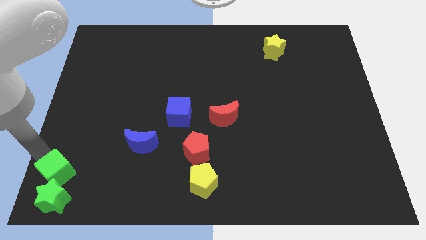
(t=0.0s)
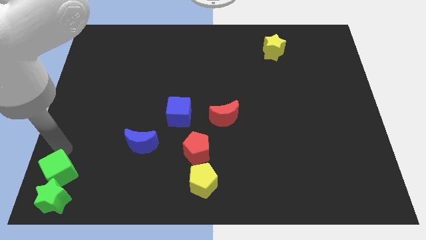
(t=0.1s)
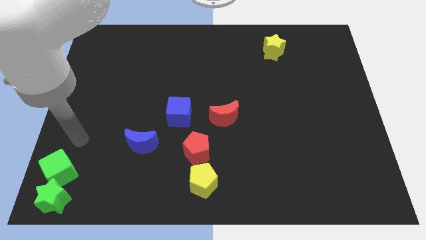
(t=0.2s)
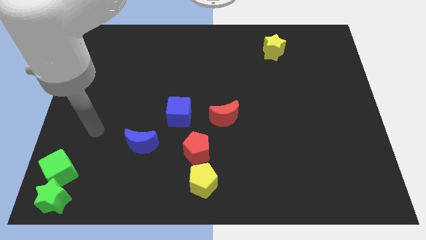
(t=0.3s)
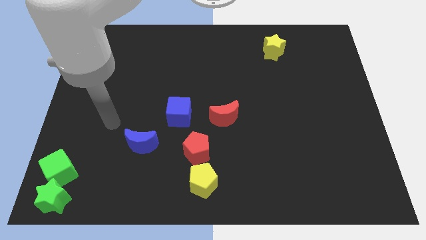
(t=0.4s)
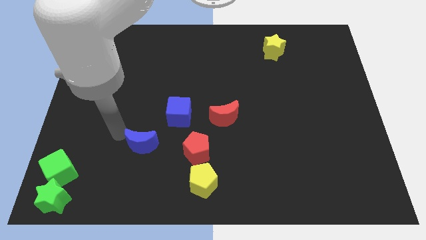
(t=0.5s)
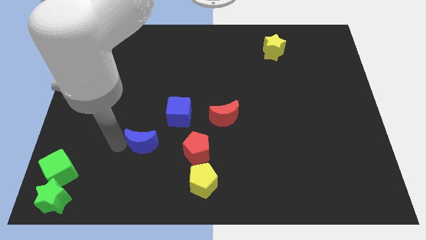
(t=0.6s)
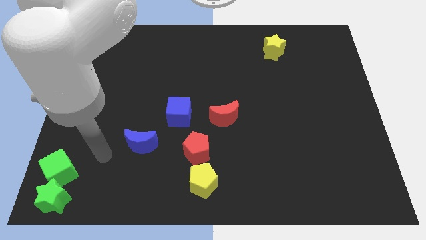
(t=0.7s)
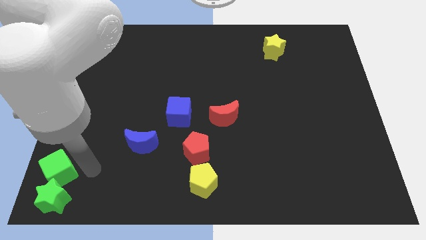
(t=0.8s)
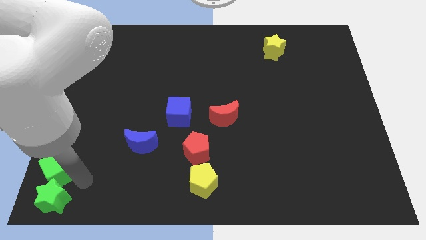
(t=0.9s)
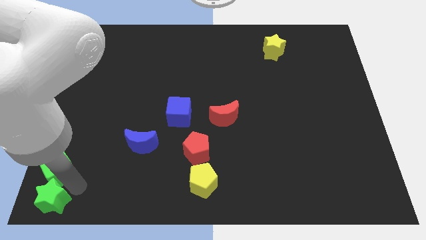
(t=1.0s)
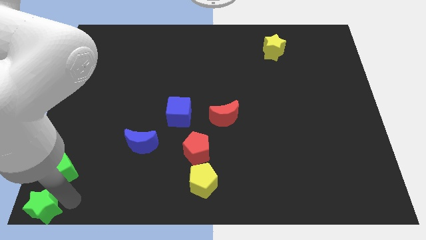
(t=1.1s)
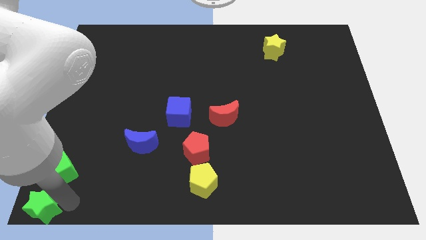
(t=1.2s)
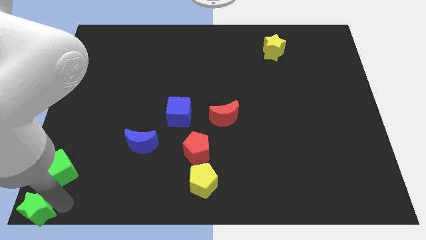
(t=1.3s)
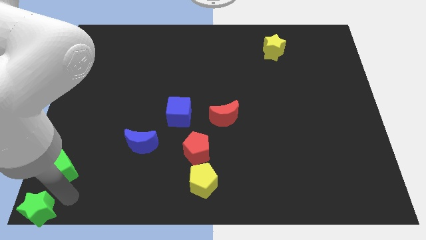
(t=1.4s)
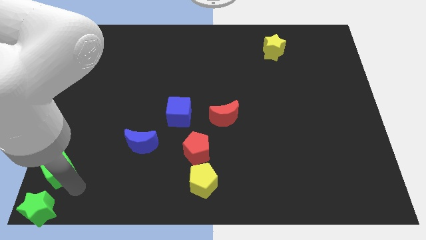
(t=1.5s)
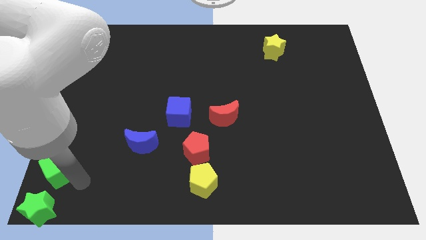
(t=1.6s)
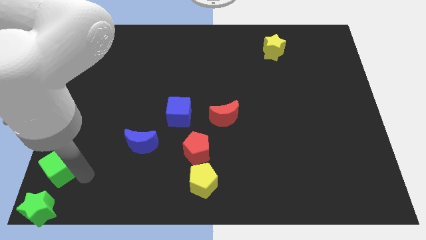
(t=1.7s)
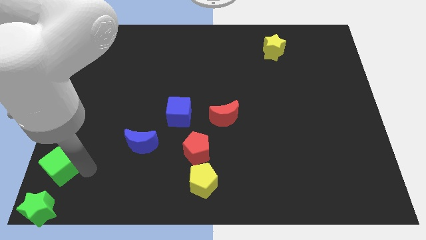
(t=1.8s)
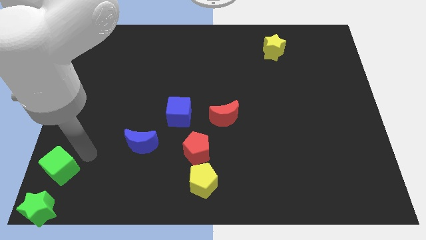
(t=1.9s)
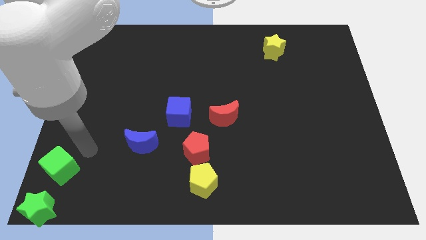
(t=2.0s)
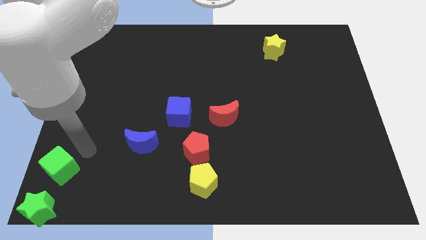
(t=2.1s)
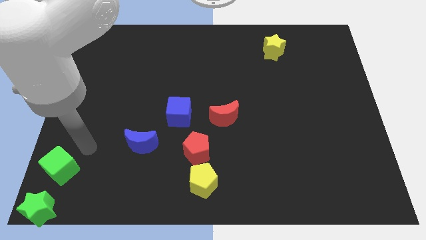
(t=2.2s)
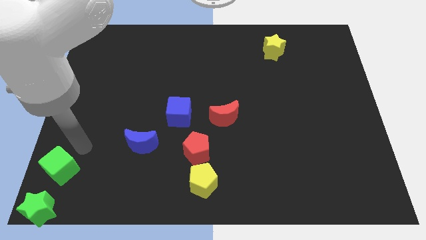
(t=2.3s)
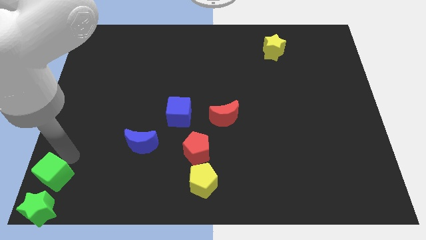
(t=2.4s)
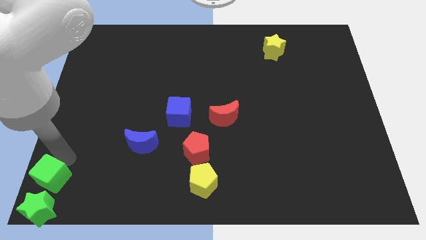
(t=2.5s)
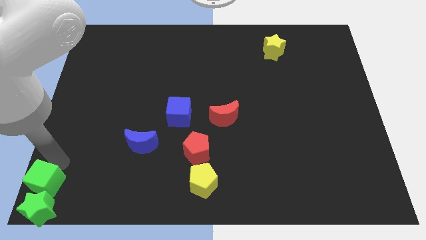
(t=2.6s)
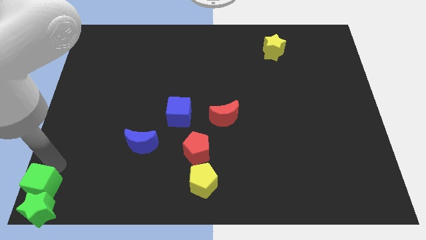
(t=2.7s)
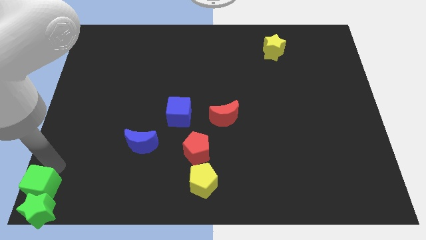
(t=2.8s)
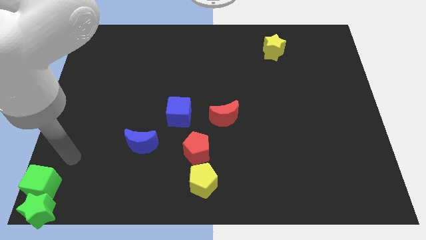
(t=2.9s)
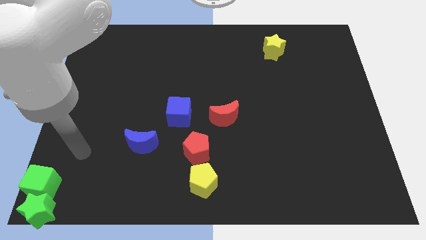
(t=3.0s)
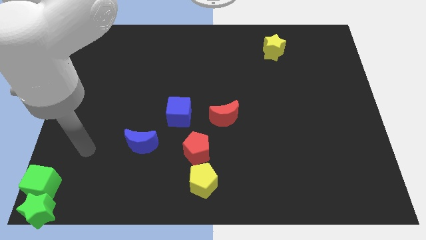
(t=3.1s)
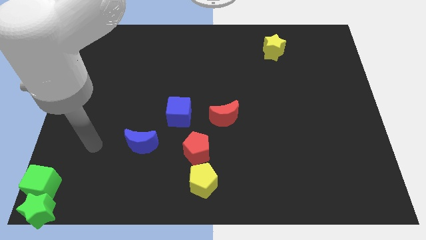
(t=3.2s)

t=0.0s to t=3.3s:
push green cube along with green star to the bottom left corner of the board

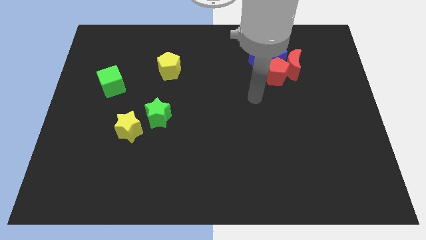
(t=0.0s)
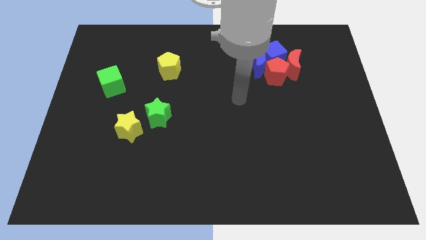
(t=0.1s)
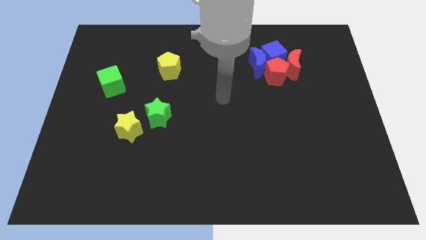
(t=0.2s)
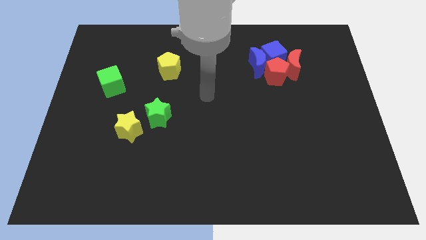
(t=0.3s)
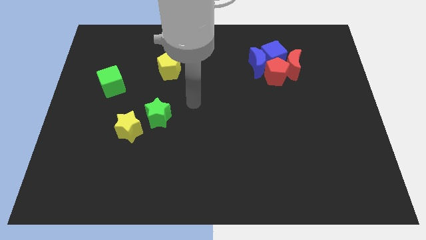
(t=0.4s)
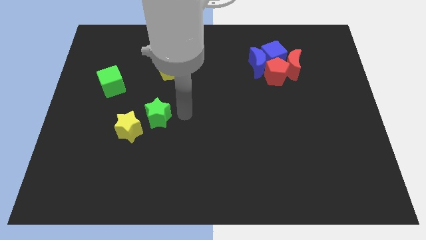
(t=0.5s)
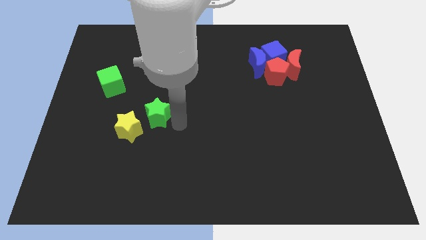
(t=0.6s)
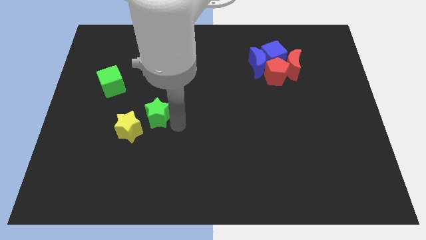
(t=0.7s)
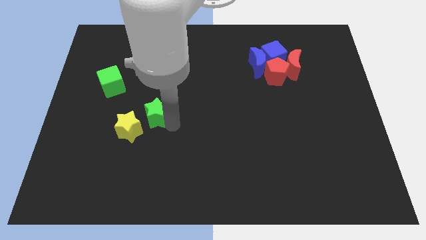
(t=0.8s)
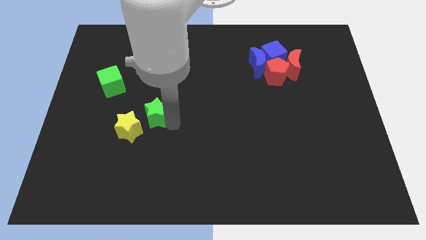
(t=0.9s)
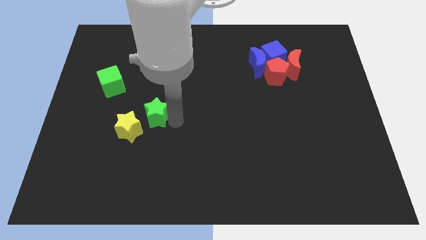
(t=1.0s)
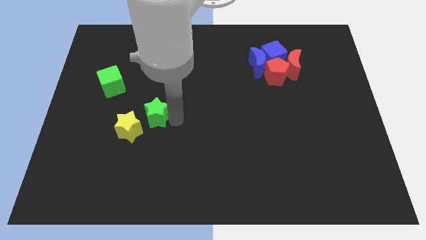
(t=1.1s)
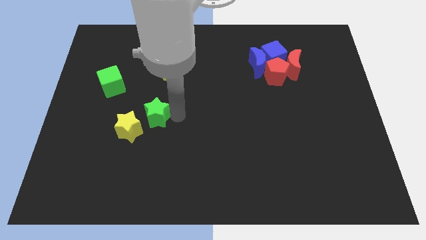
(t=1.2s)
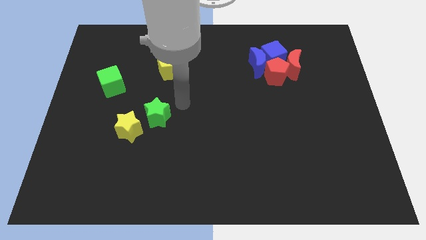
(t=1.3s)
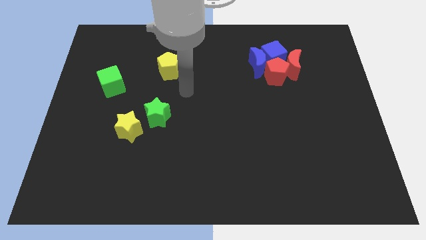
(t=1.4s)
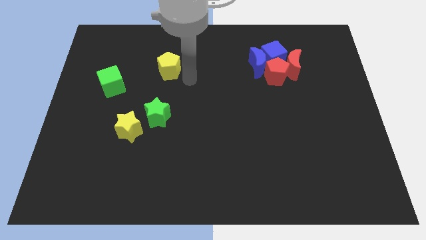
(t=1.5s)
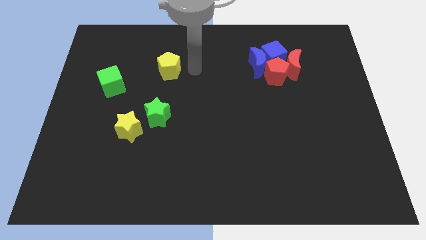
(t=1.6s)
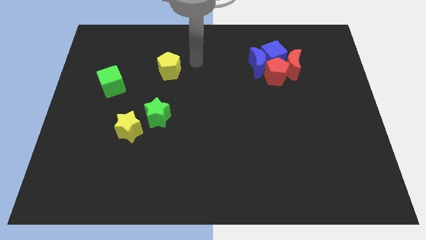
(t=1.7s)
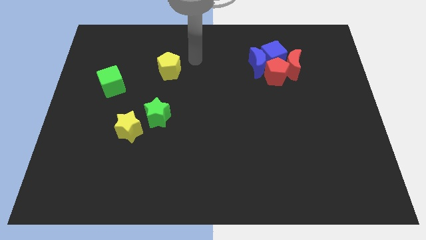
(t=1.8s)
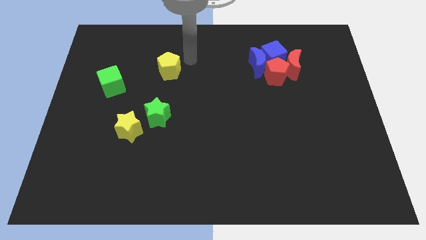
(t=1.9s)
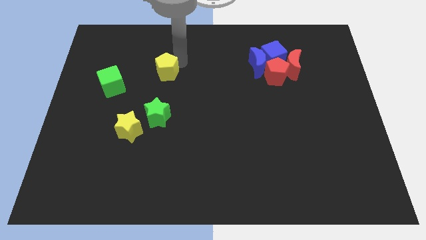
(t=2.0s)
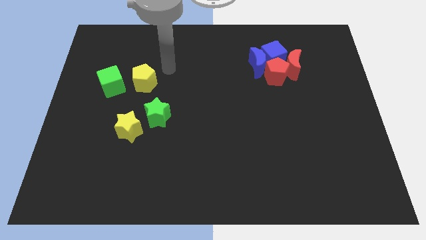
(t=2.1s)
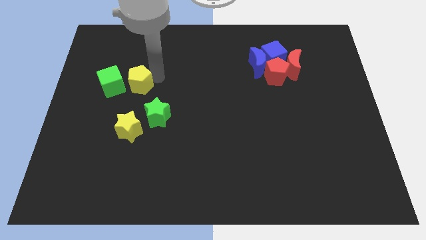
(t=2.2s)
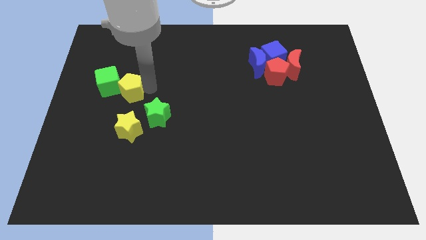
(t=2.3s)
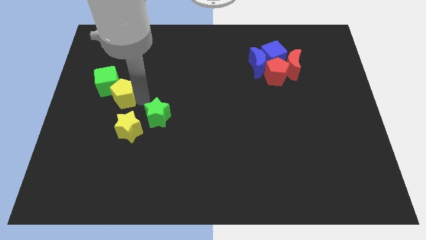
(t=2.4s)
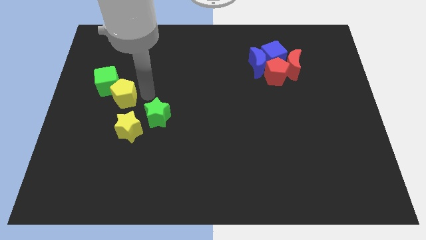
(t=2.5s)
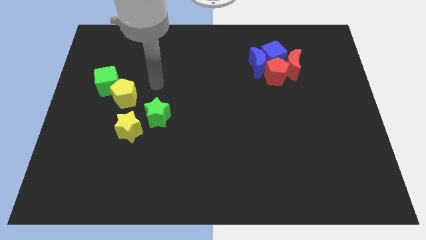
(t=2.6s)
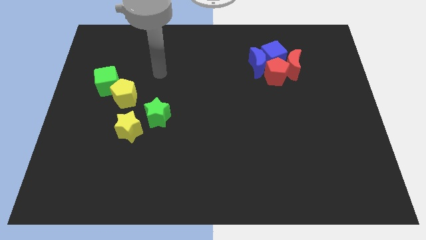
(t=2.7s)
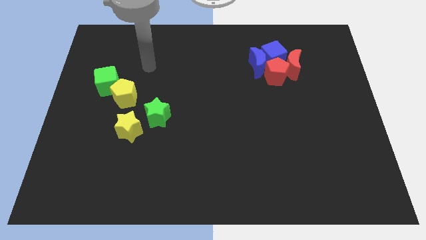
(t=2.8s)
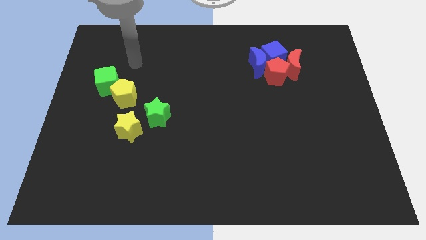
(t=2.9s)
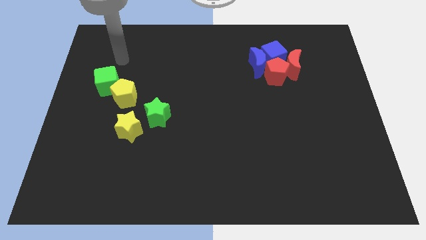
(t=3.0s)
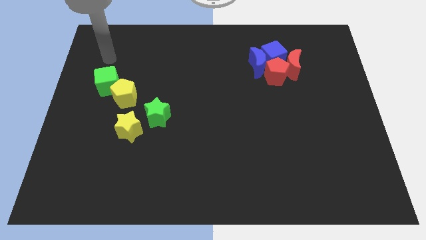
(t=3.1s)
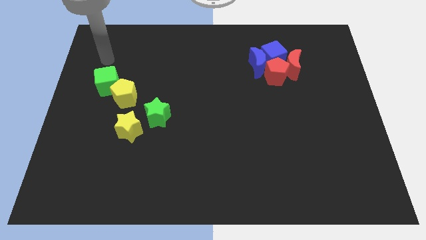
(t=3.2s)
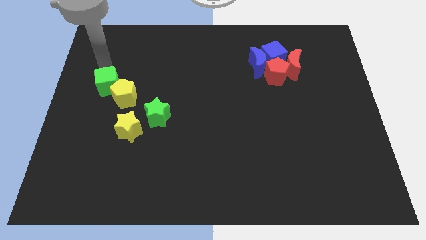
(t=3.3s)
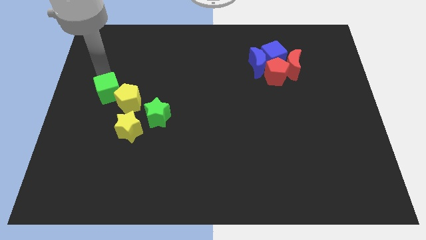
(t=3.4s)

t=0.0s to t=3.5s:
place the yellow pentagon below the green cube

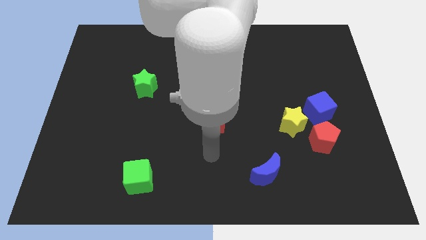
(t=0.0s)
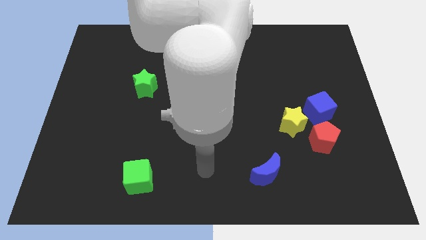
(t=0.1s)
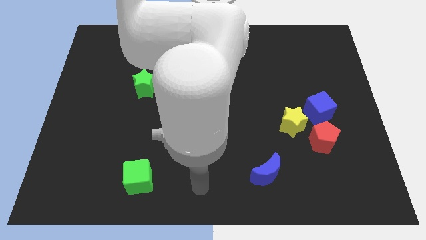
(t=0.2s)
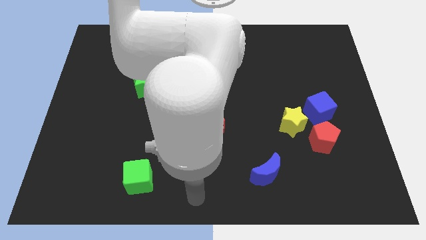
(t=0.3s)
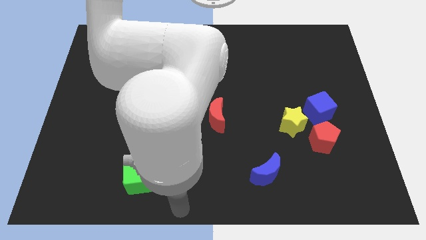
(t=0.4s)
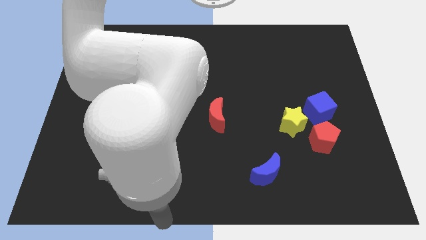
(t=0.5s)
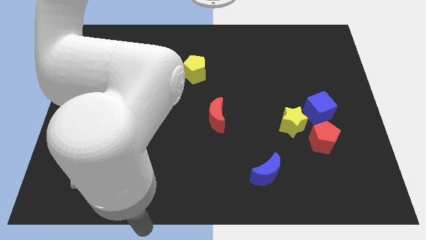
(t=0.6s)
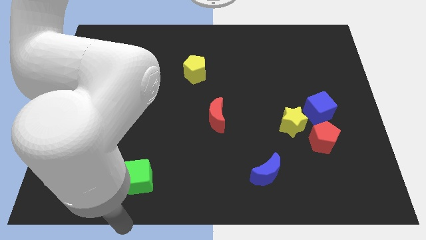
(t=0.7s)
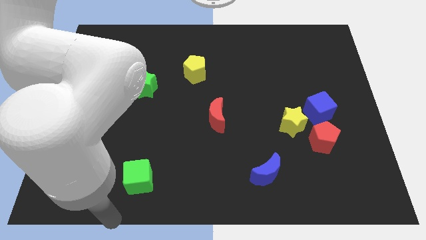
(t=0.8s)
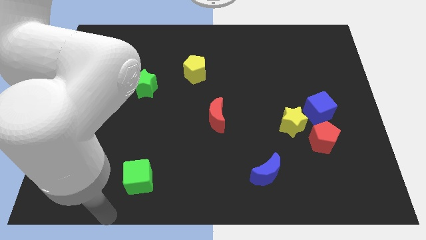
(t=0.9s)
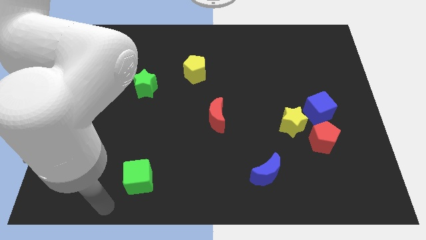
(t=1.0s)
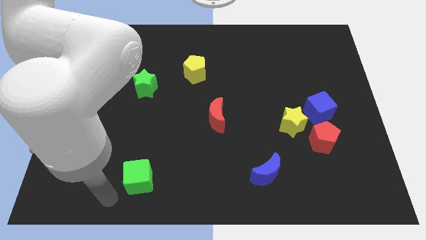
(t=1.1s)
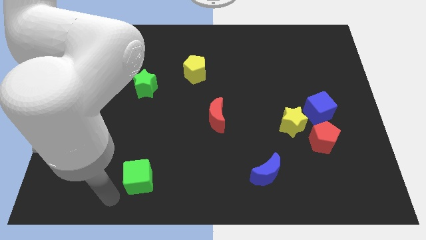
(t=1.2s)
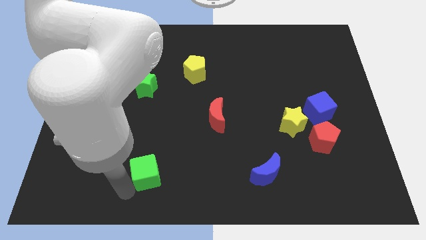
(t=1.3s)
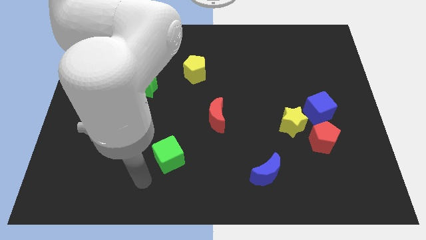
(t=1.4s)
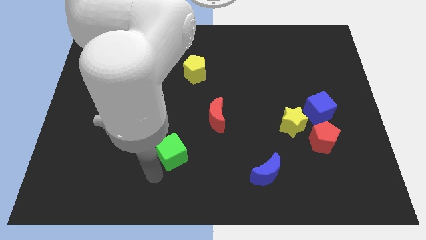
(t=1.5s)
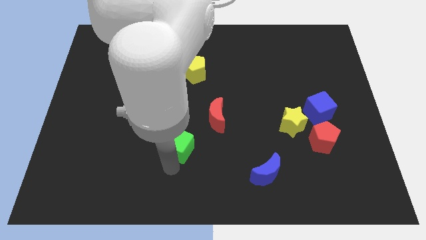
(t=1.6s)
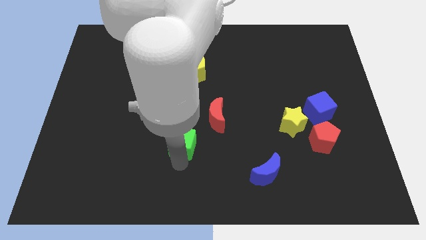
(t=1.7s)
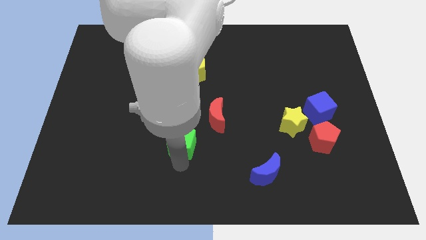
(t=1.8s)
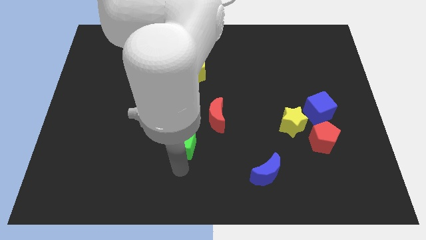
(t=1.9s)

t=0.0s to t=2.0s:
push the green cube towards the red crescent
